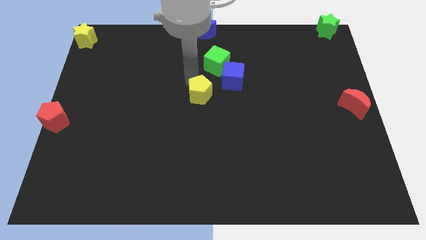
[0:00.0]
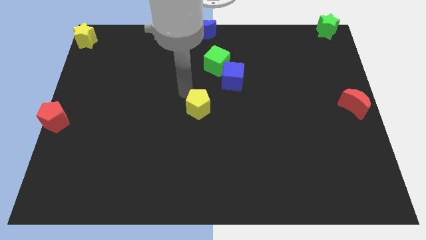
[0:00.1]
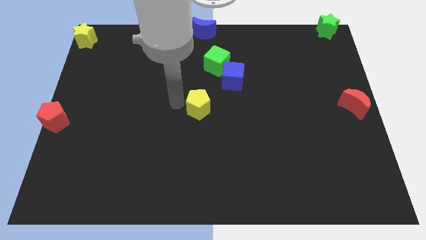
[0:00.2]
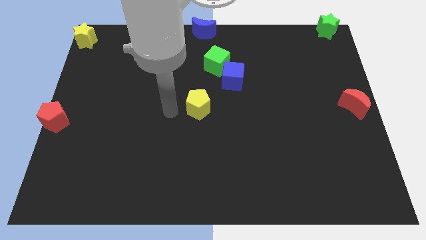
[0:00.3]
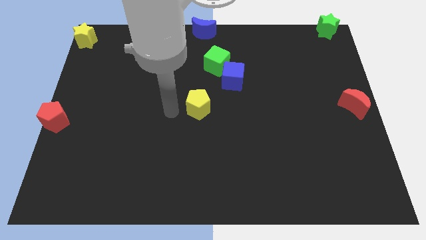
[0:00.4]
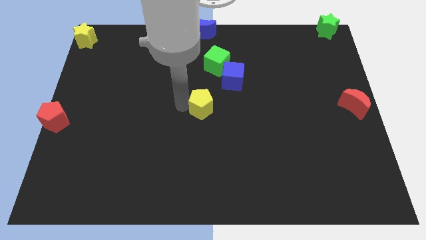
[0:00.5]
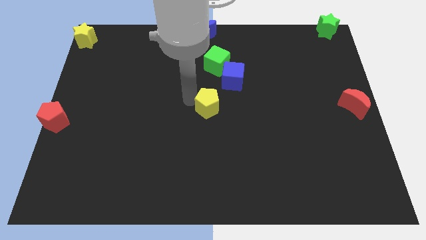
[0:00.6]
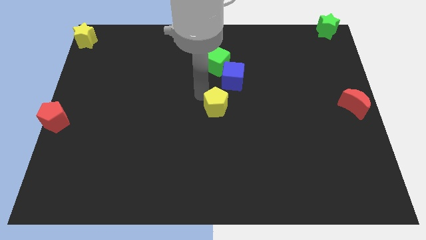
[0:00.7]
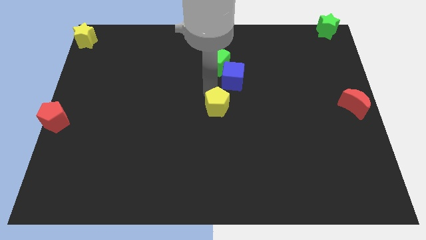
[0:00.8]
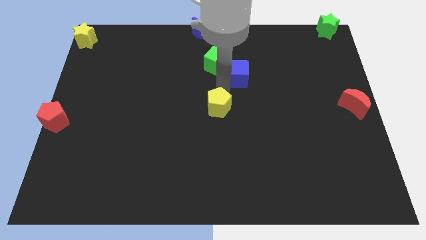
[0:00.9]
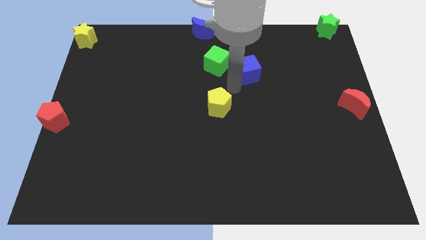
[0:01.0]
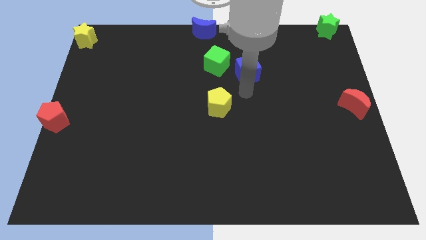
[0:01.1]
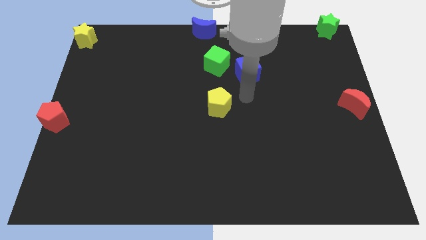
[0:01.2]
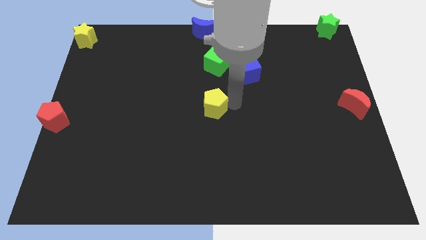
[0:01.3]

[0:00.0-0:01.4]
push the yellow pentagon to the center of the board

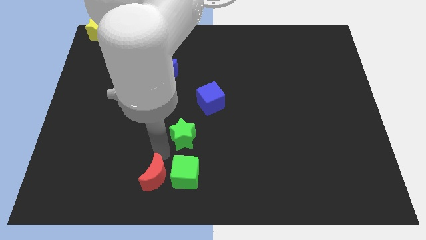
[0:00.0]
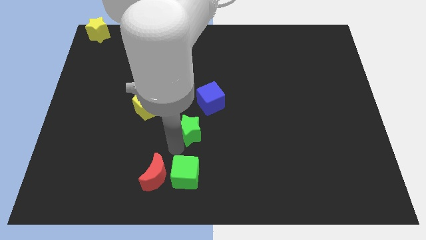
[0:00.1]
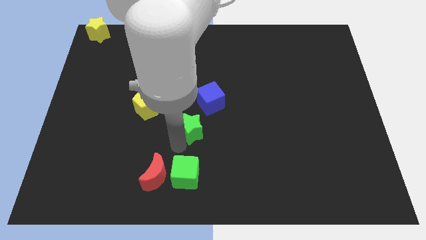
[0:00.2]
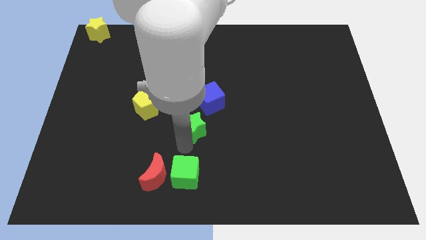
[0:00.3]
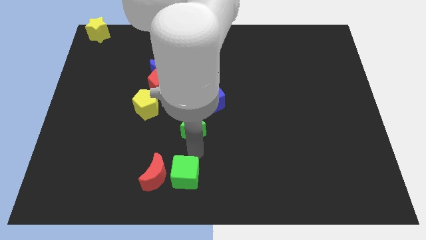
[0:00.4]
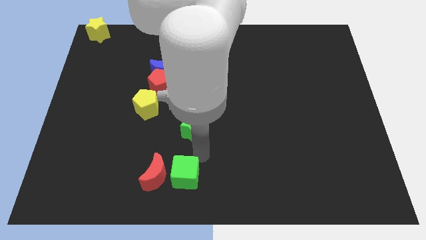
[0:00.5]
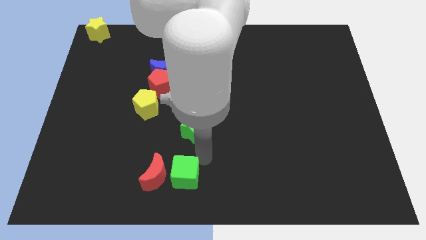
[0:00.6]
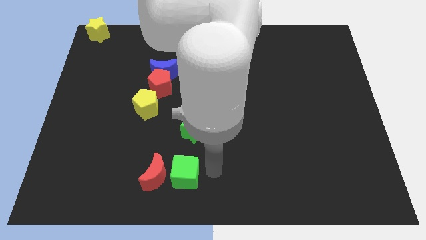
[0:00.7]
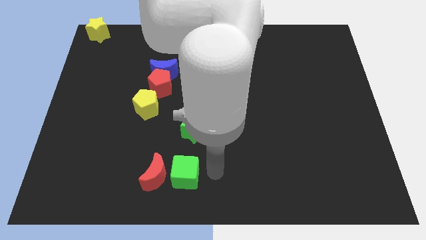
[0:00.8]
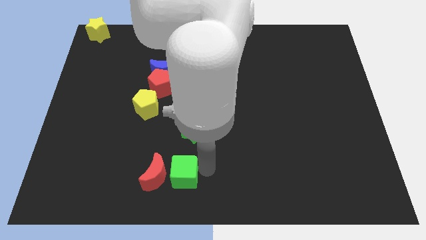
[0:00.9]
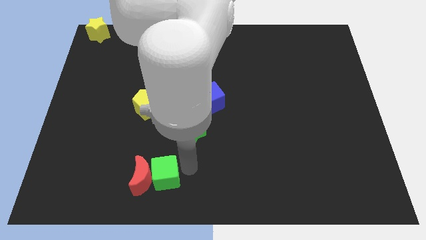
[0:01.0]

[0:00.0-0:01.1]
push the green cube into the red crescent

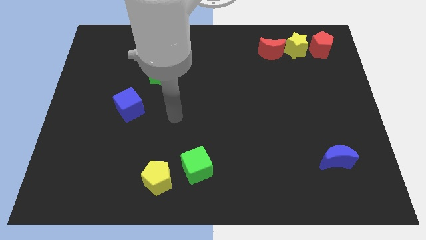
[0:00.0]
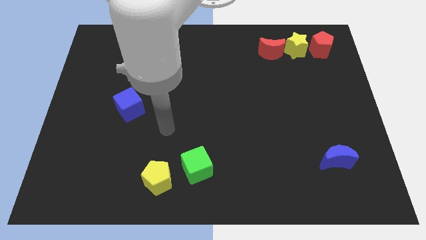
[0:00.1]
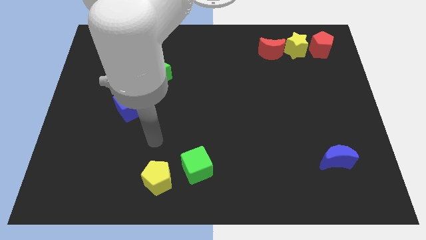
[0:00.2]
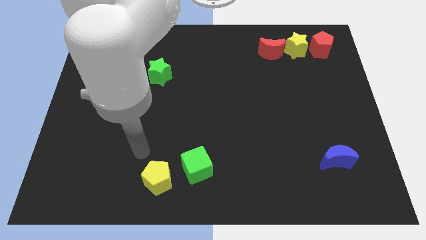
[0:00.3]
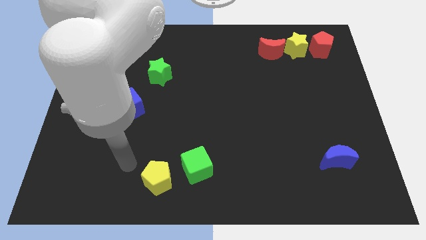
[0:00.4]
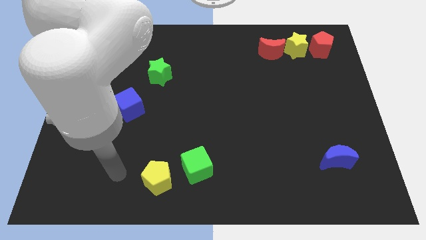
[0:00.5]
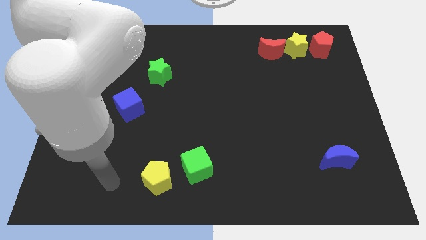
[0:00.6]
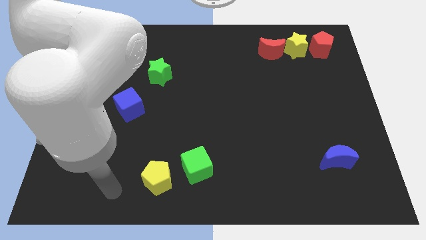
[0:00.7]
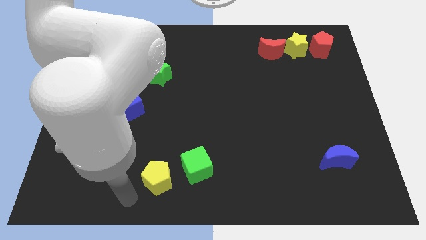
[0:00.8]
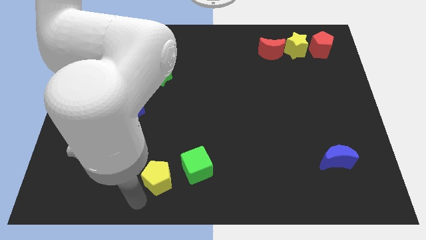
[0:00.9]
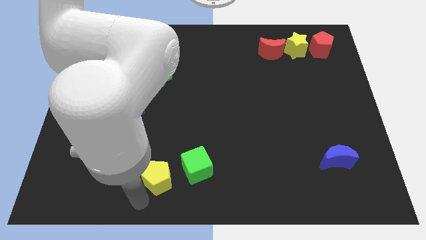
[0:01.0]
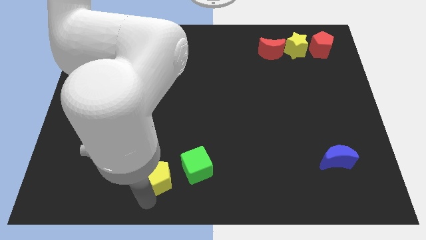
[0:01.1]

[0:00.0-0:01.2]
place the arm down to the yellow pentagon

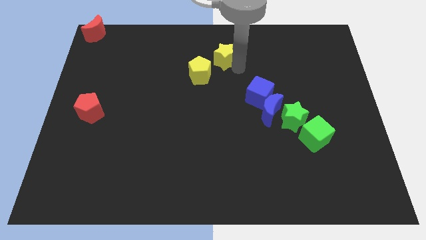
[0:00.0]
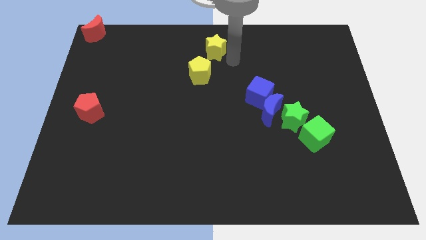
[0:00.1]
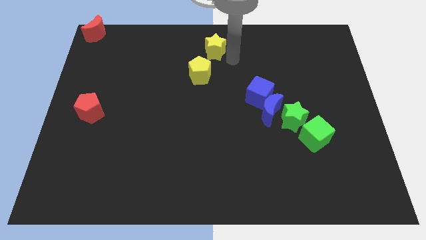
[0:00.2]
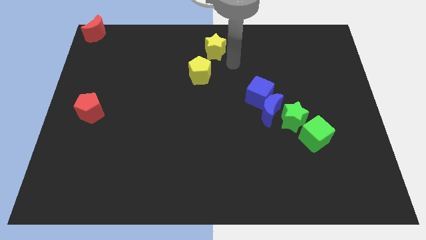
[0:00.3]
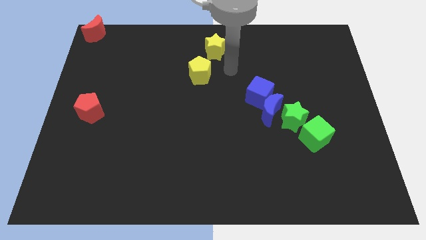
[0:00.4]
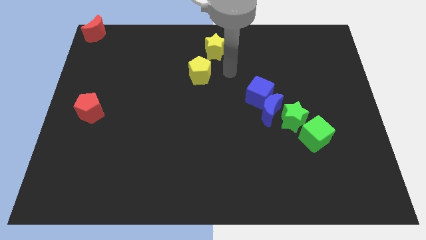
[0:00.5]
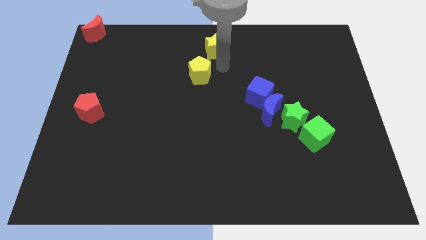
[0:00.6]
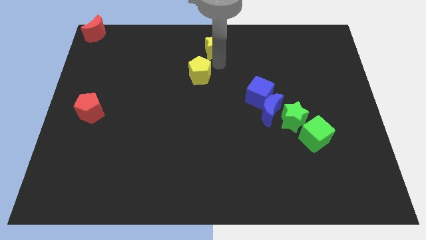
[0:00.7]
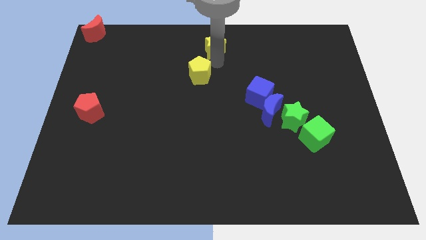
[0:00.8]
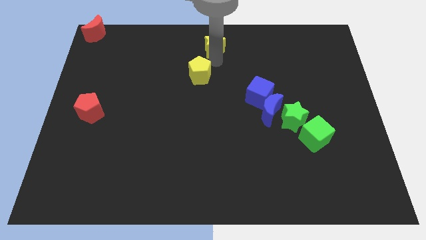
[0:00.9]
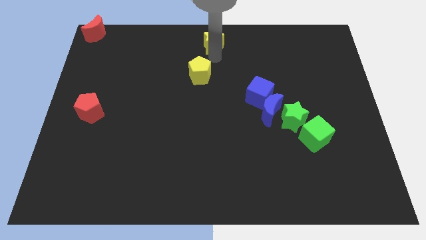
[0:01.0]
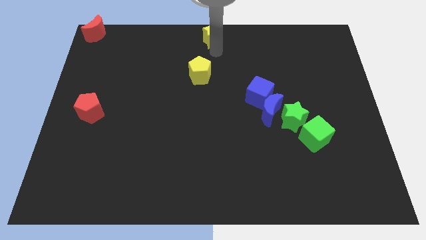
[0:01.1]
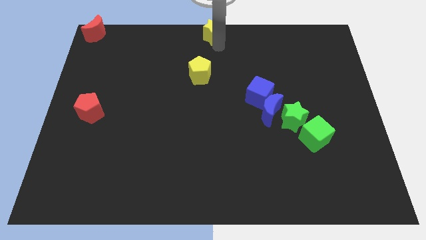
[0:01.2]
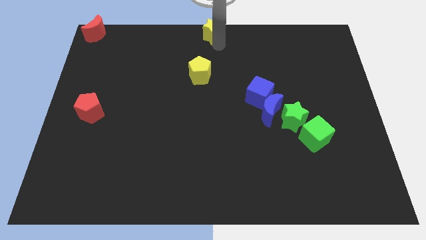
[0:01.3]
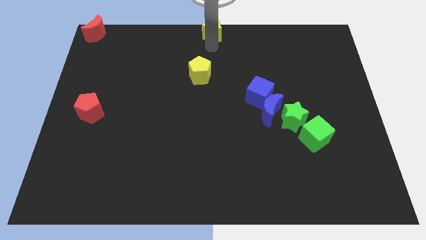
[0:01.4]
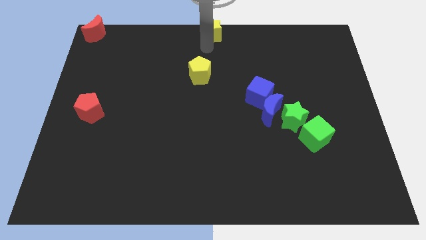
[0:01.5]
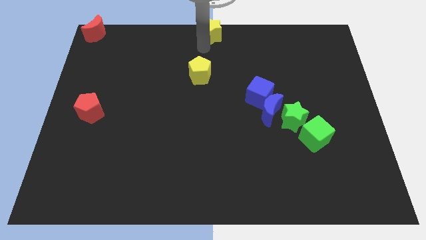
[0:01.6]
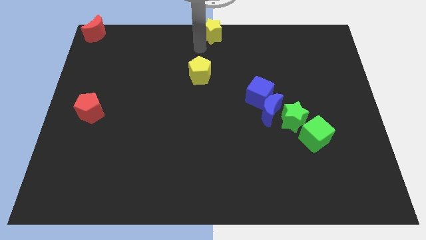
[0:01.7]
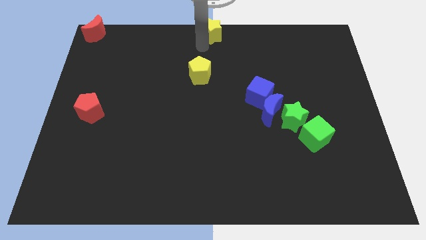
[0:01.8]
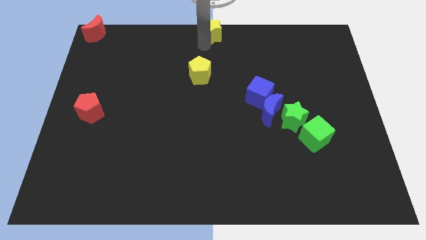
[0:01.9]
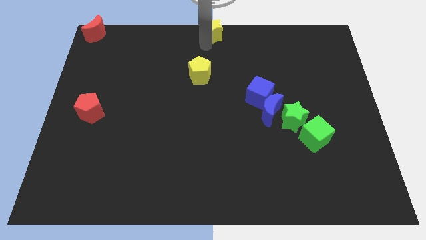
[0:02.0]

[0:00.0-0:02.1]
move the yellow star to the top center of the board

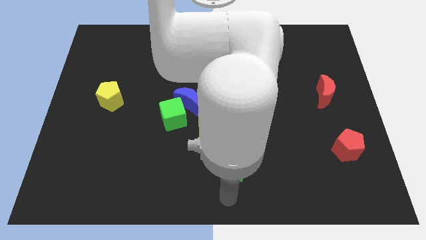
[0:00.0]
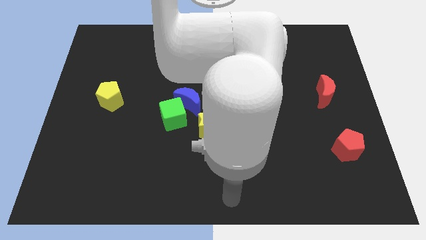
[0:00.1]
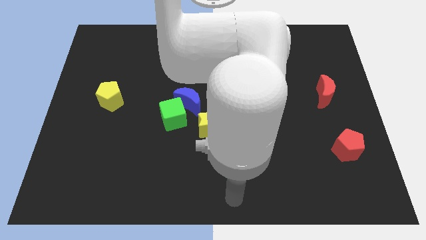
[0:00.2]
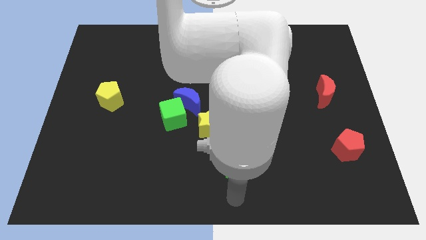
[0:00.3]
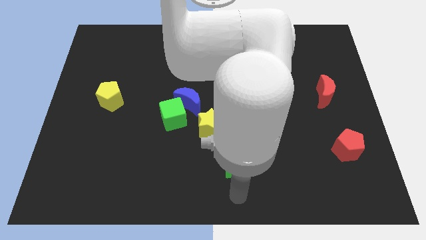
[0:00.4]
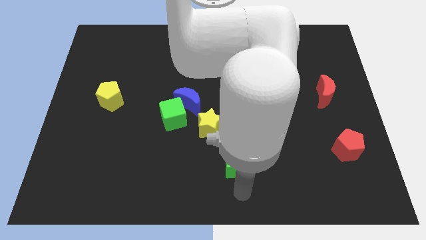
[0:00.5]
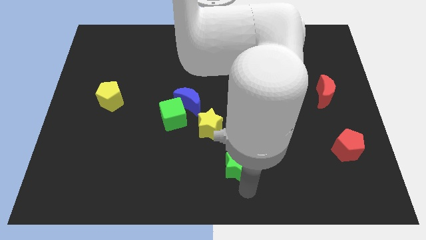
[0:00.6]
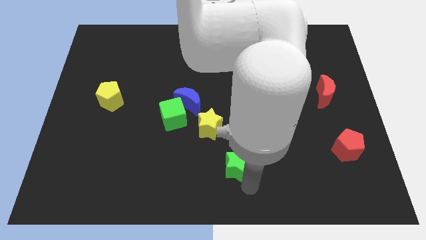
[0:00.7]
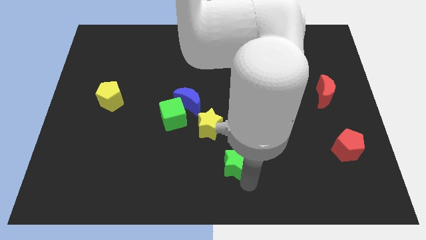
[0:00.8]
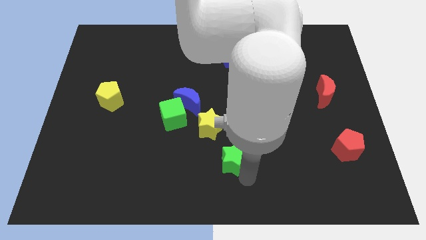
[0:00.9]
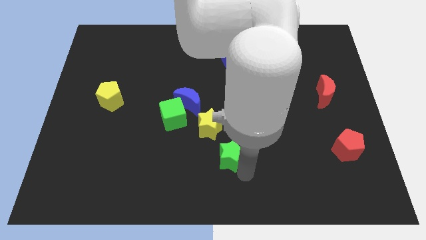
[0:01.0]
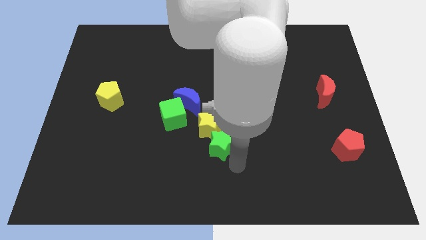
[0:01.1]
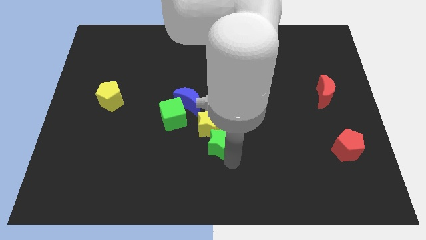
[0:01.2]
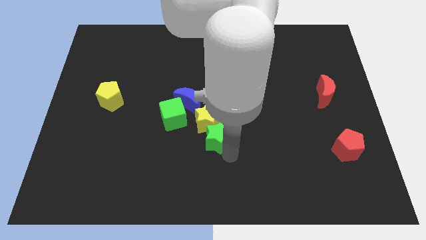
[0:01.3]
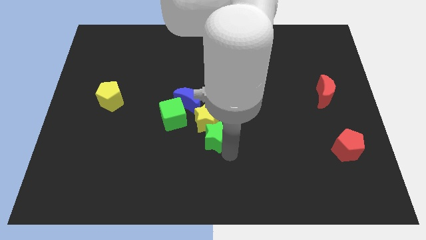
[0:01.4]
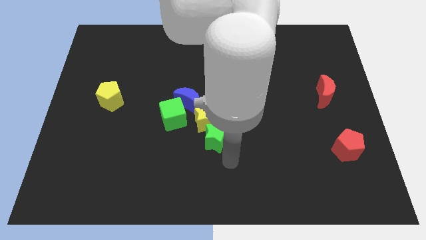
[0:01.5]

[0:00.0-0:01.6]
move the green star into the yellow star

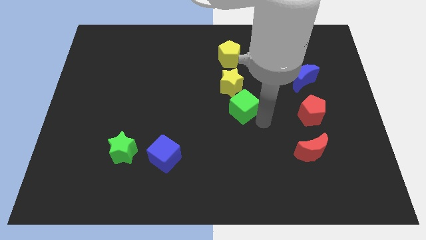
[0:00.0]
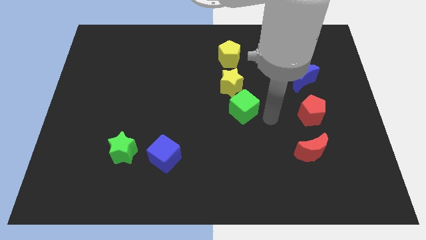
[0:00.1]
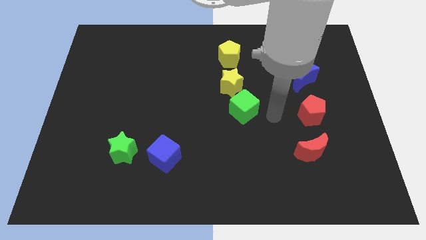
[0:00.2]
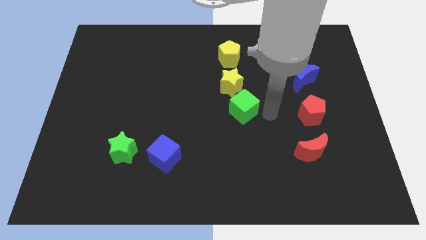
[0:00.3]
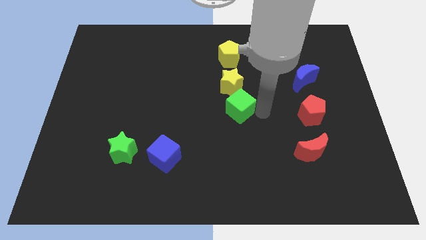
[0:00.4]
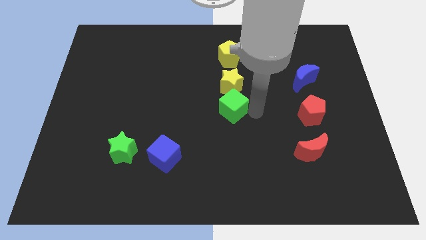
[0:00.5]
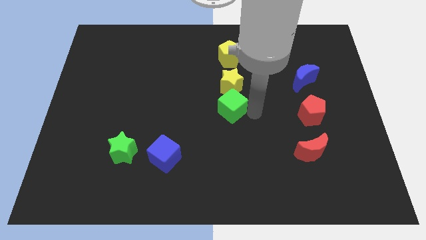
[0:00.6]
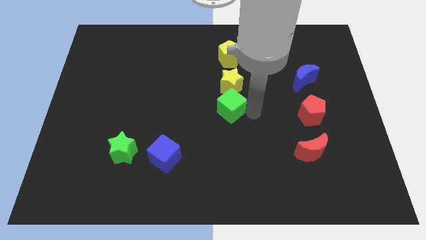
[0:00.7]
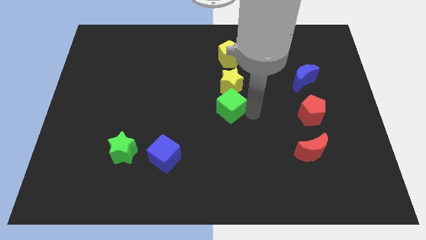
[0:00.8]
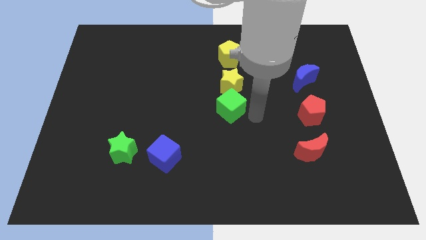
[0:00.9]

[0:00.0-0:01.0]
move the green cube to the bottom of yellow star

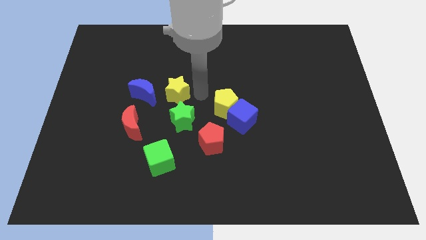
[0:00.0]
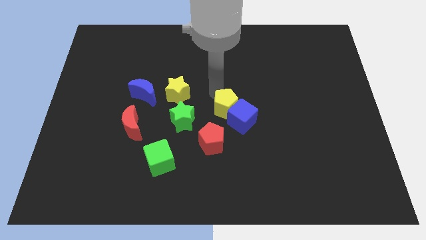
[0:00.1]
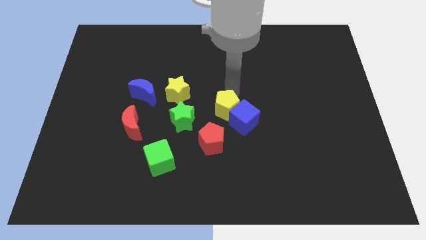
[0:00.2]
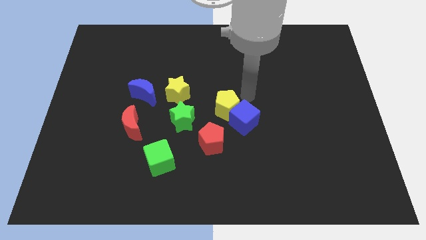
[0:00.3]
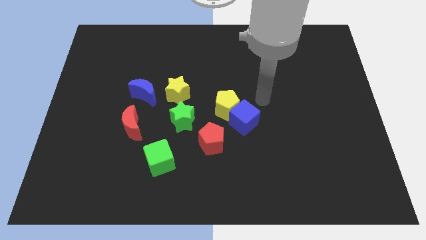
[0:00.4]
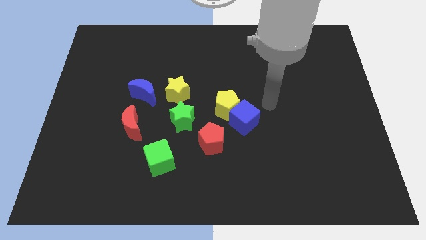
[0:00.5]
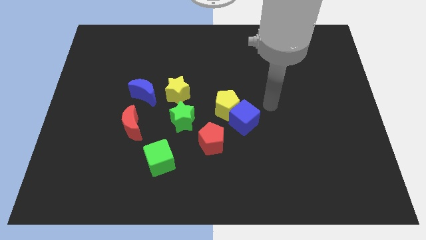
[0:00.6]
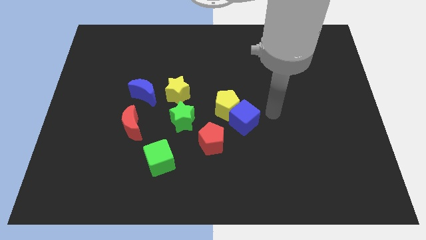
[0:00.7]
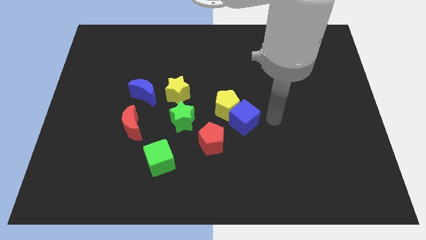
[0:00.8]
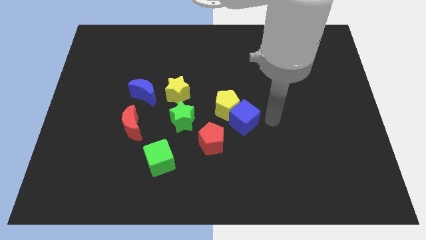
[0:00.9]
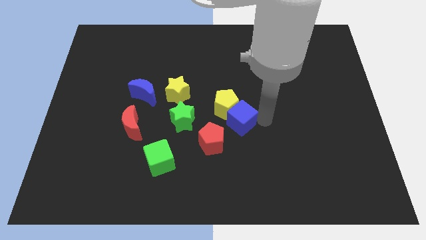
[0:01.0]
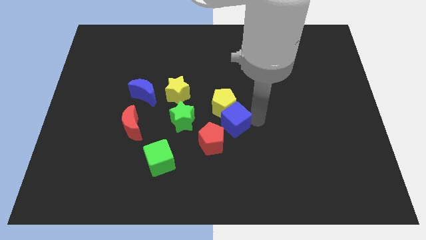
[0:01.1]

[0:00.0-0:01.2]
tap the right side of the blue cube
